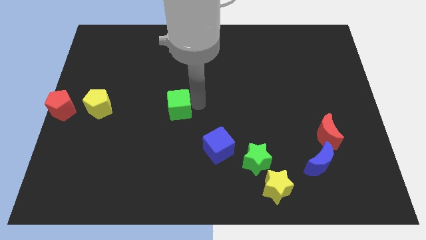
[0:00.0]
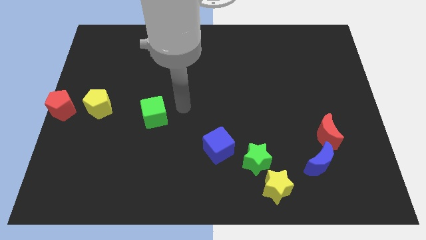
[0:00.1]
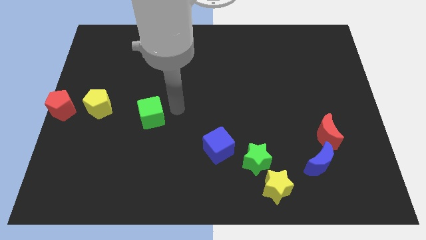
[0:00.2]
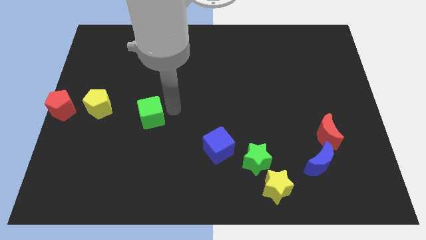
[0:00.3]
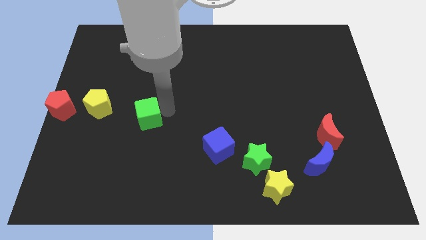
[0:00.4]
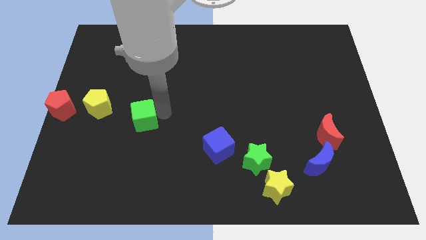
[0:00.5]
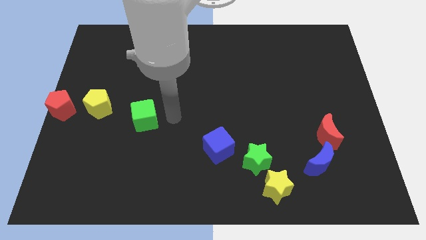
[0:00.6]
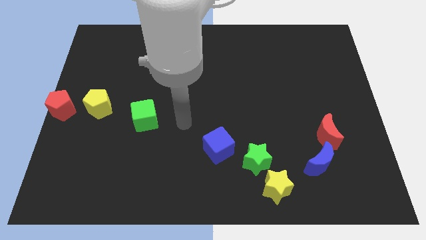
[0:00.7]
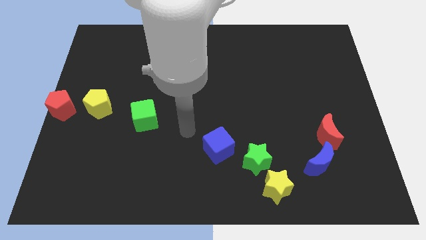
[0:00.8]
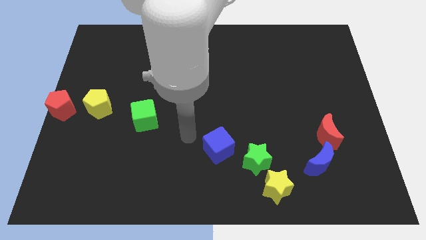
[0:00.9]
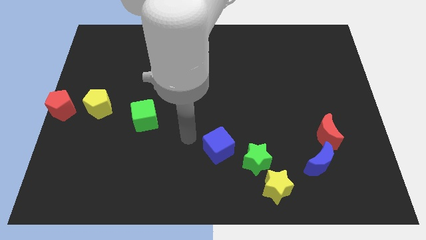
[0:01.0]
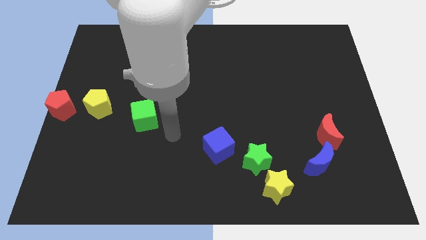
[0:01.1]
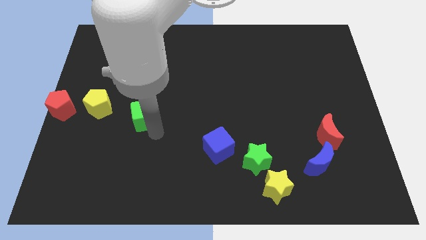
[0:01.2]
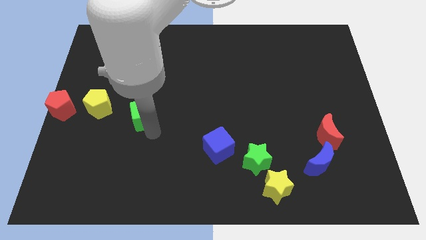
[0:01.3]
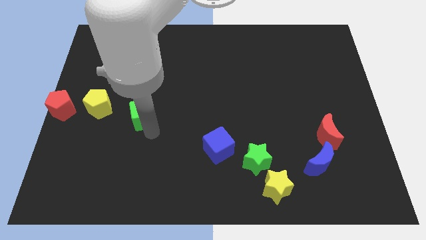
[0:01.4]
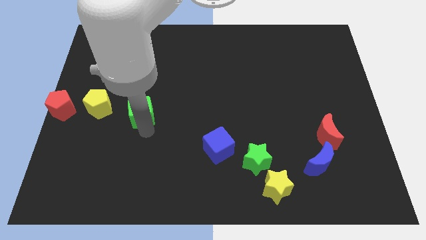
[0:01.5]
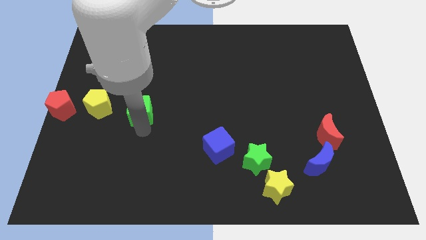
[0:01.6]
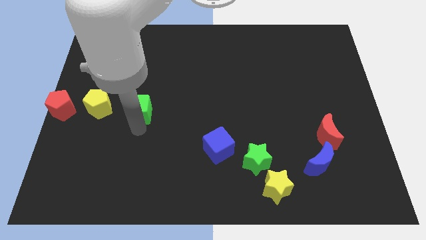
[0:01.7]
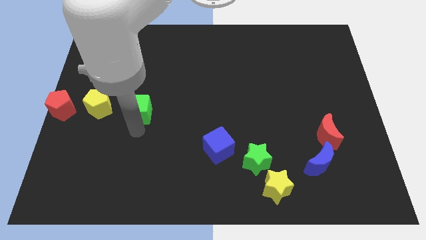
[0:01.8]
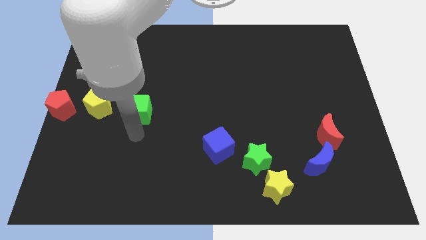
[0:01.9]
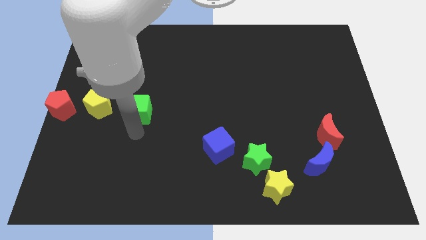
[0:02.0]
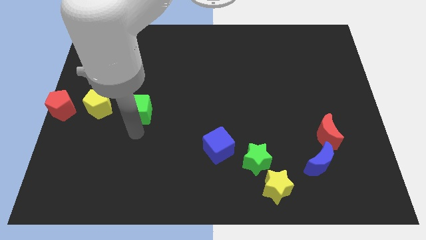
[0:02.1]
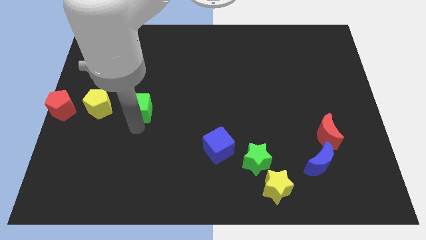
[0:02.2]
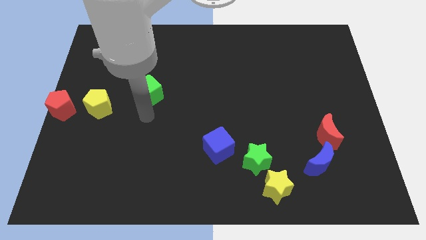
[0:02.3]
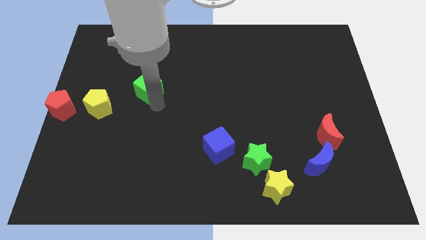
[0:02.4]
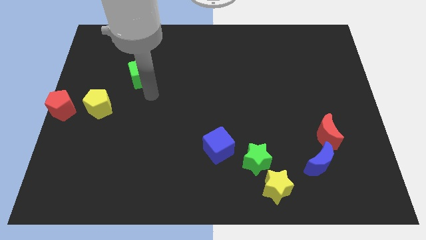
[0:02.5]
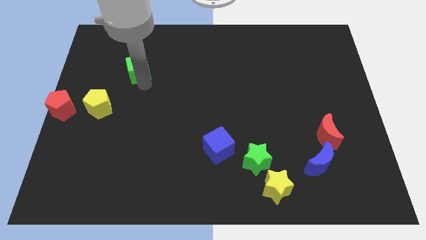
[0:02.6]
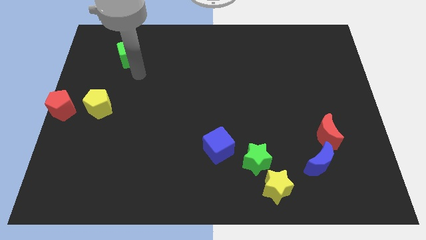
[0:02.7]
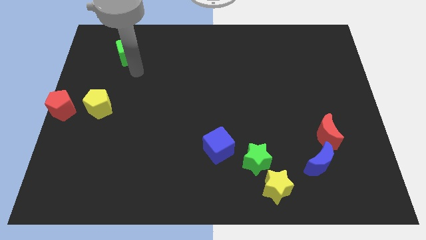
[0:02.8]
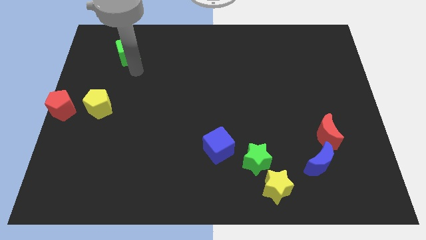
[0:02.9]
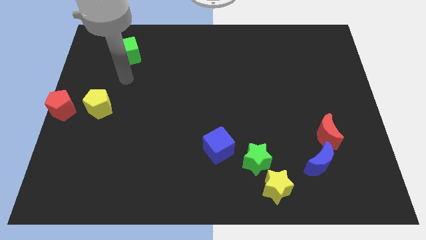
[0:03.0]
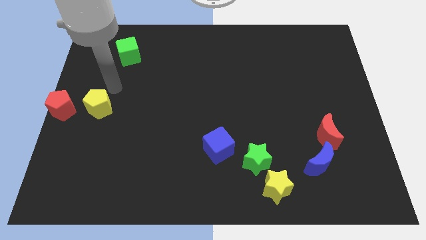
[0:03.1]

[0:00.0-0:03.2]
slide the green cube diagonally top right to the yellow pentagon

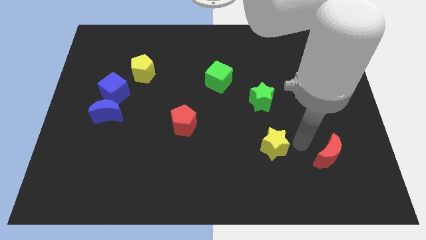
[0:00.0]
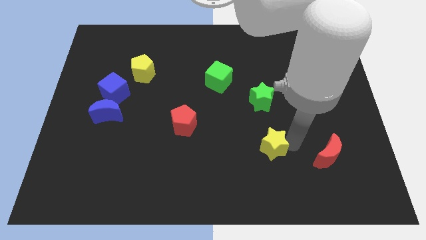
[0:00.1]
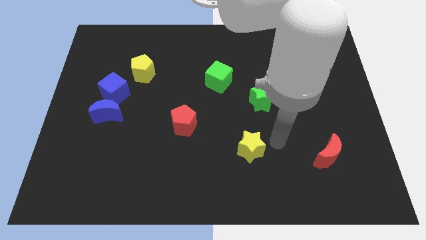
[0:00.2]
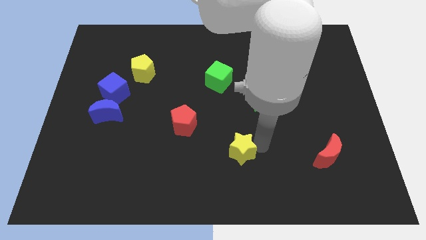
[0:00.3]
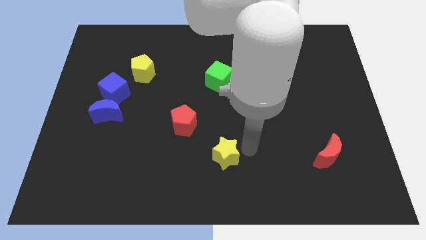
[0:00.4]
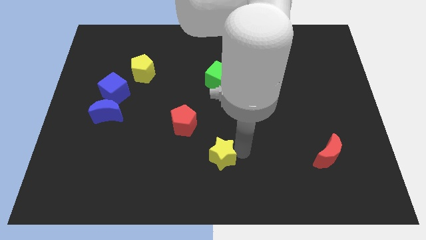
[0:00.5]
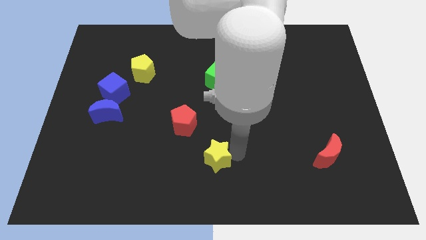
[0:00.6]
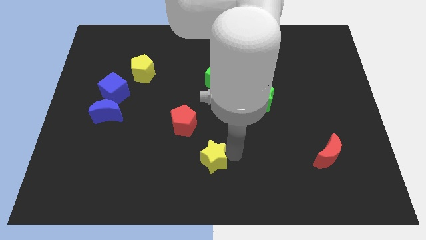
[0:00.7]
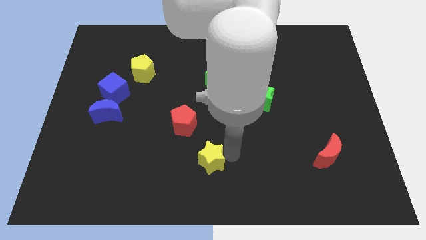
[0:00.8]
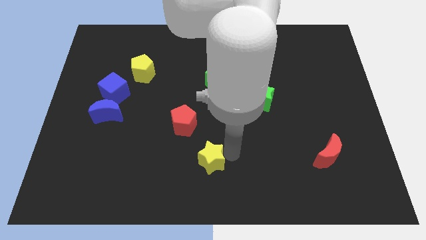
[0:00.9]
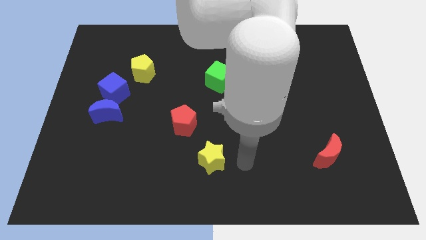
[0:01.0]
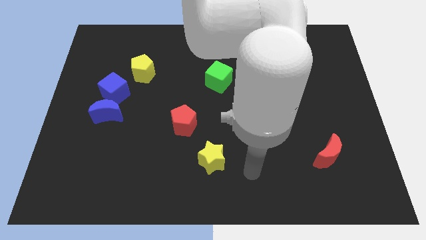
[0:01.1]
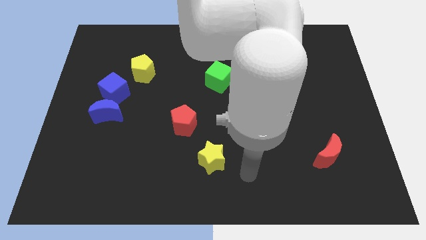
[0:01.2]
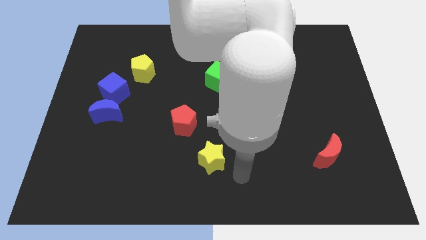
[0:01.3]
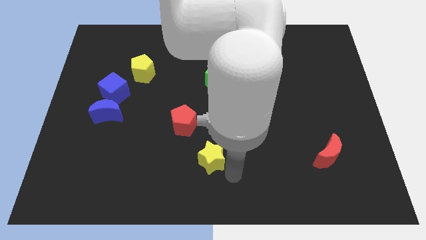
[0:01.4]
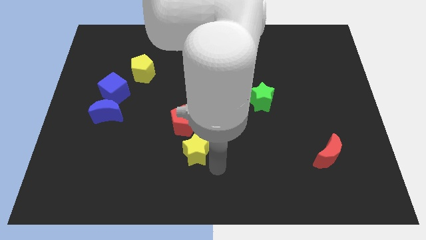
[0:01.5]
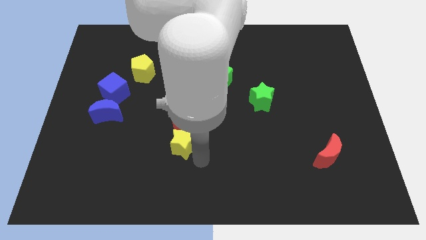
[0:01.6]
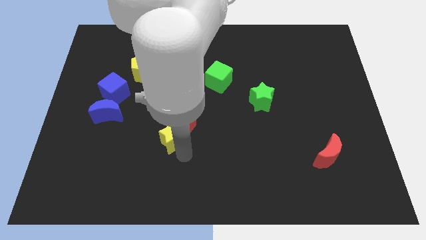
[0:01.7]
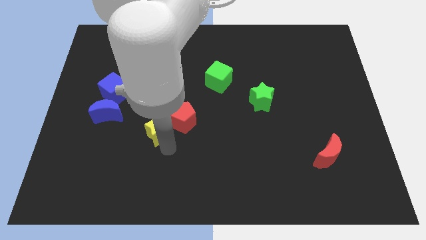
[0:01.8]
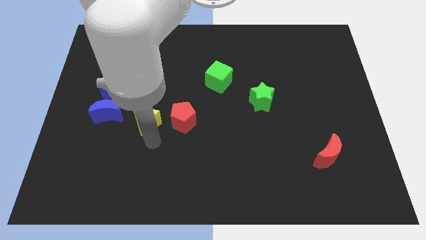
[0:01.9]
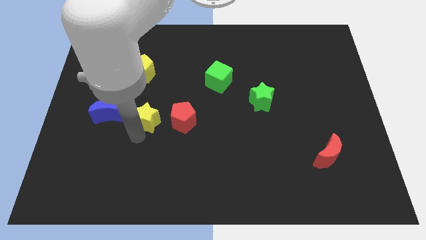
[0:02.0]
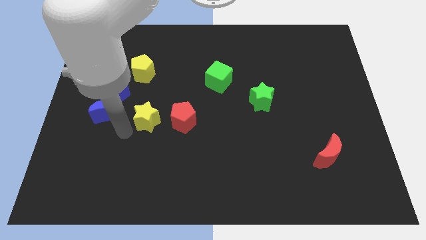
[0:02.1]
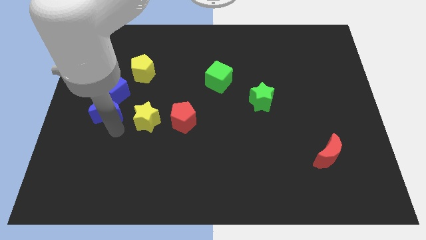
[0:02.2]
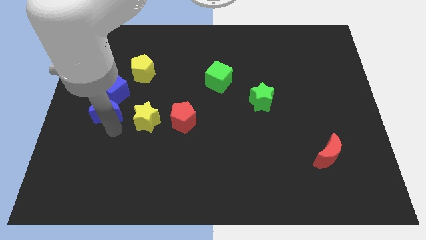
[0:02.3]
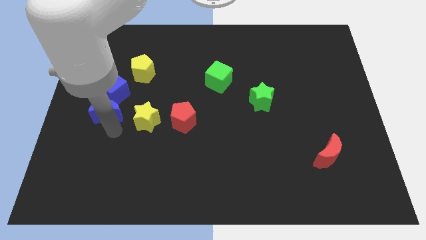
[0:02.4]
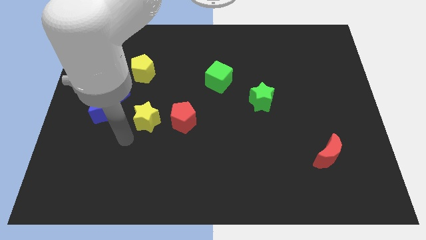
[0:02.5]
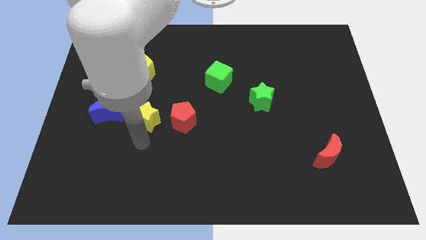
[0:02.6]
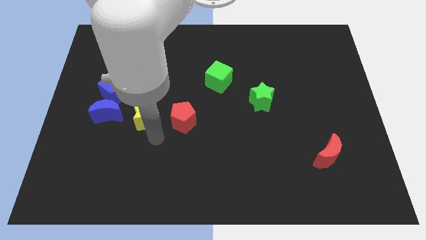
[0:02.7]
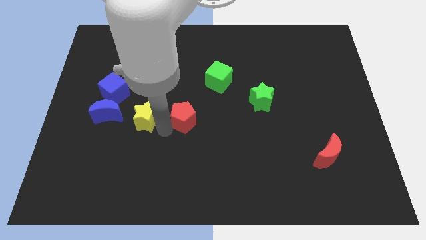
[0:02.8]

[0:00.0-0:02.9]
place the yellow pentagon in between the red pentagon and blue crescent

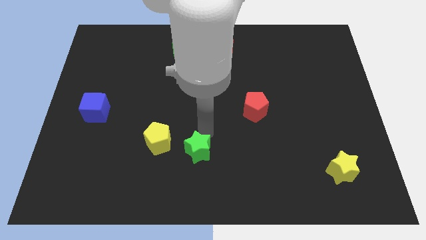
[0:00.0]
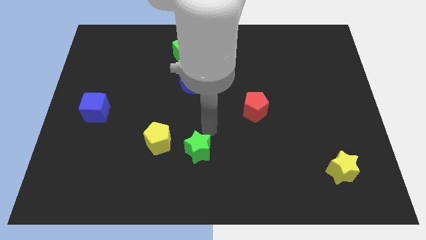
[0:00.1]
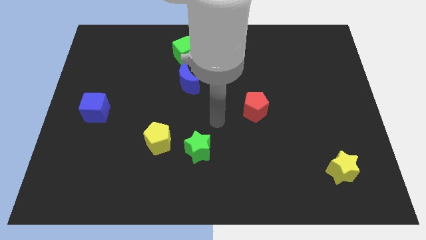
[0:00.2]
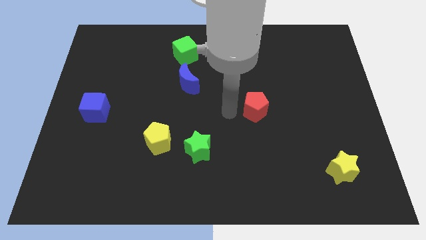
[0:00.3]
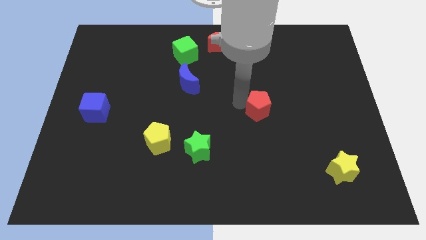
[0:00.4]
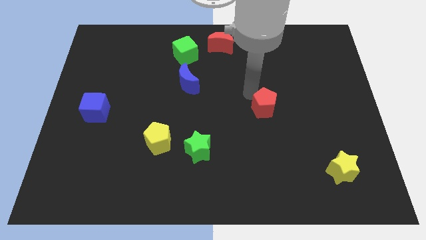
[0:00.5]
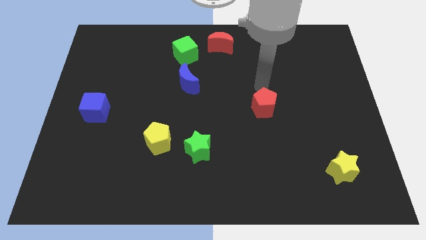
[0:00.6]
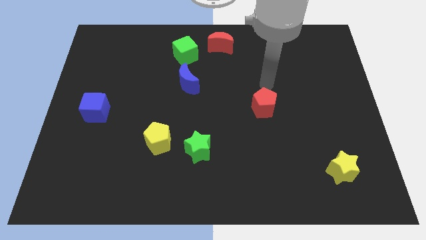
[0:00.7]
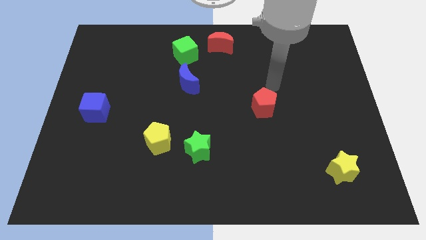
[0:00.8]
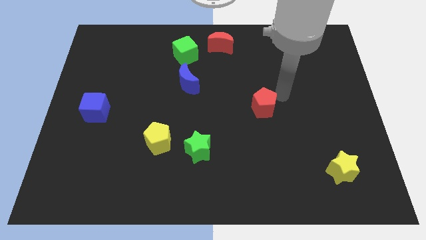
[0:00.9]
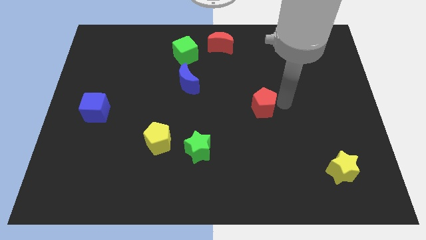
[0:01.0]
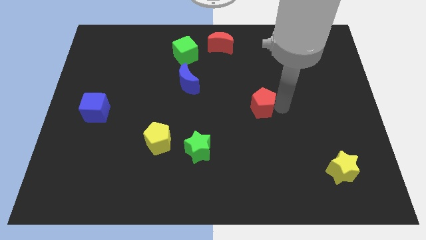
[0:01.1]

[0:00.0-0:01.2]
slightly touch the red pentagon

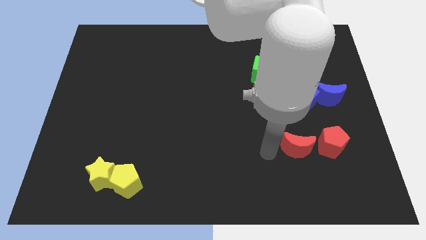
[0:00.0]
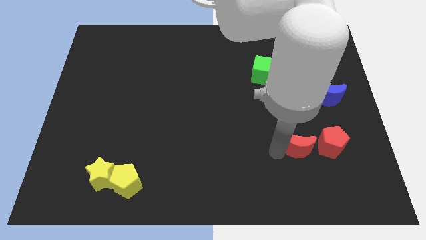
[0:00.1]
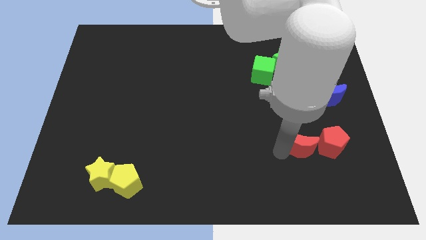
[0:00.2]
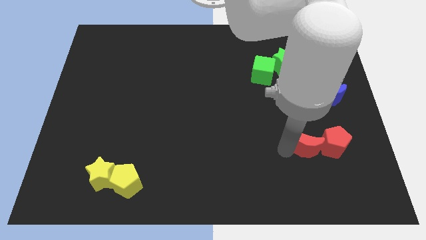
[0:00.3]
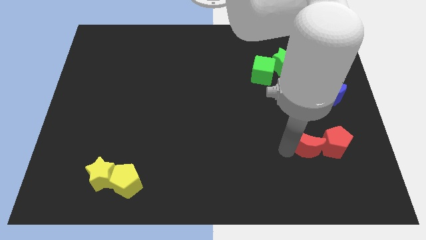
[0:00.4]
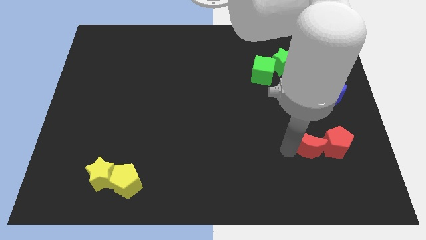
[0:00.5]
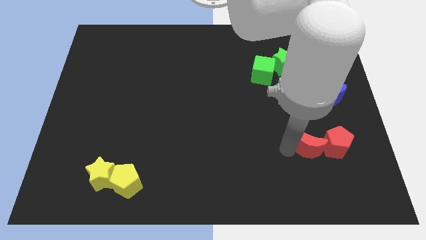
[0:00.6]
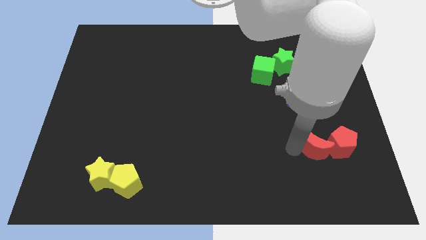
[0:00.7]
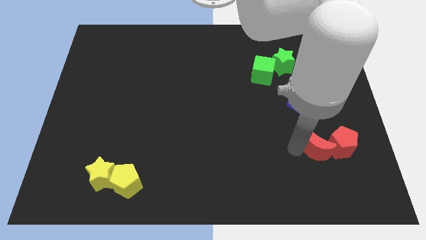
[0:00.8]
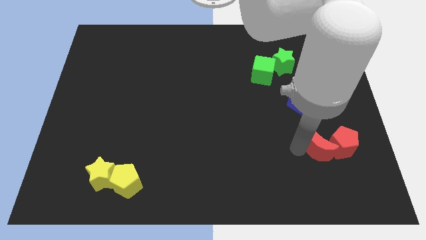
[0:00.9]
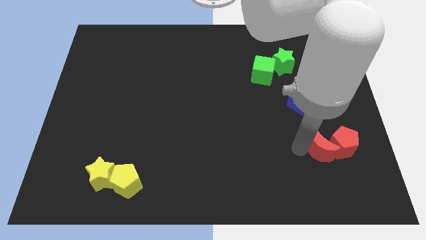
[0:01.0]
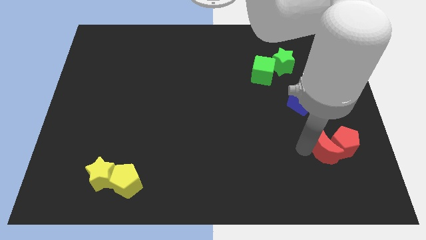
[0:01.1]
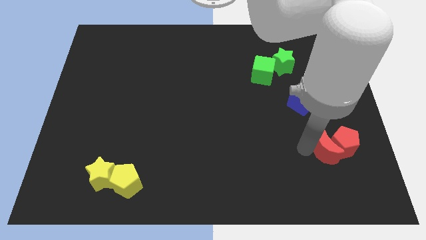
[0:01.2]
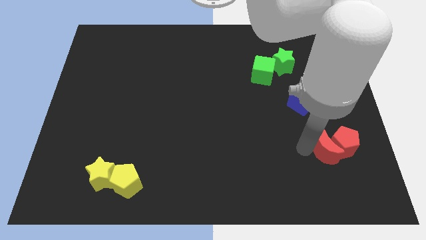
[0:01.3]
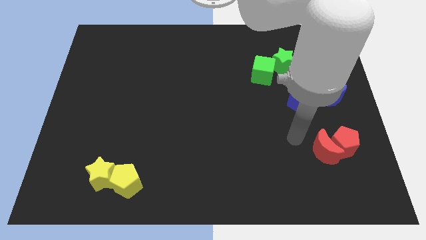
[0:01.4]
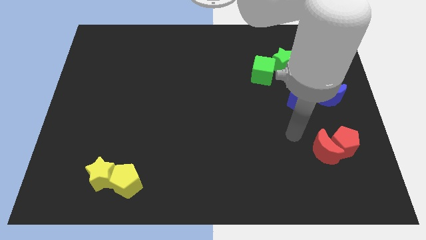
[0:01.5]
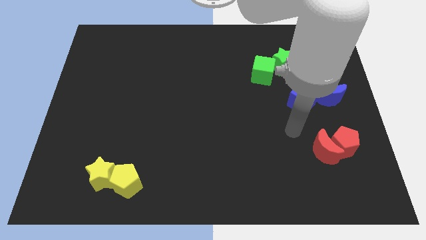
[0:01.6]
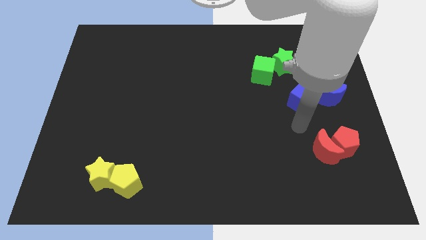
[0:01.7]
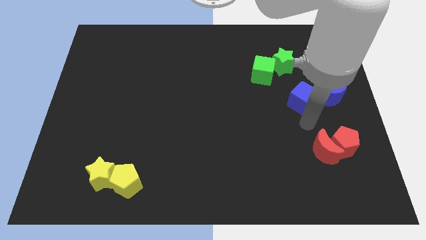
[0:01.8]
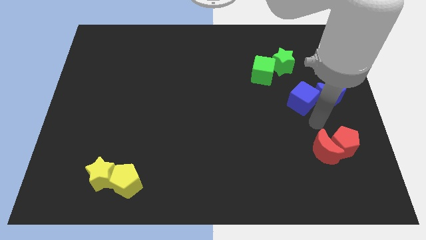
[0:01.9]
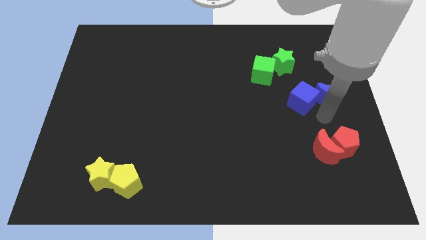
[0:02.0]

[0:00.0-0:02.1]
slide the red moon into the red pentagon
